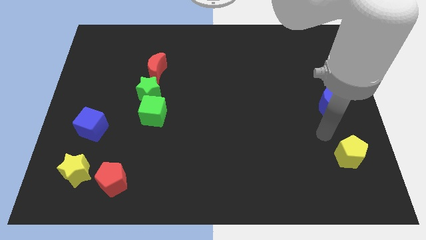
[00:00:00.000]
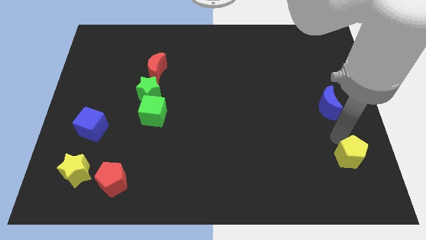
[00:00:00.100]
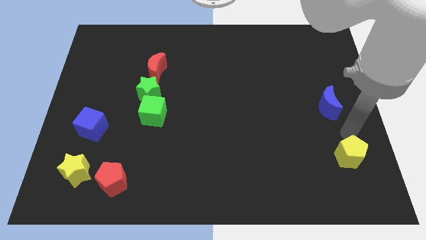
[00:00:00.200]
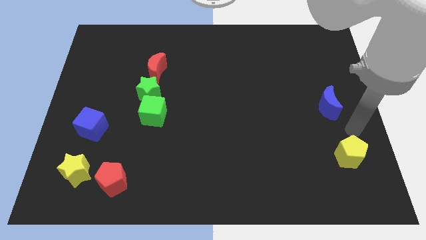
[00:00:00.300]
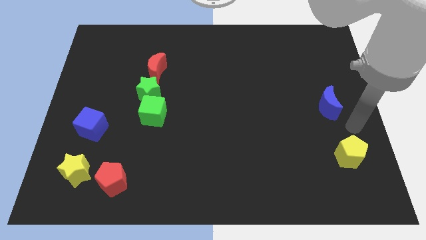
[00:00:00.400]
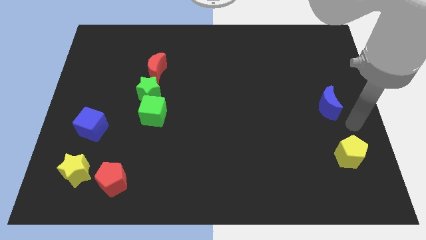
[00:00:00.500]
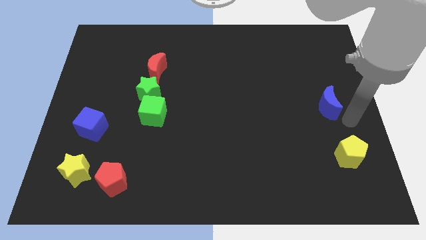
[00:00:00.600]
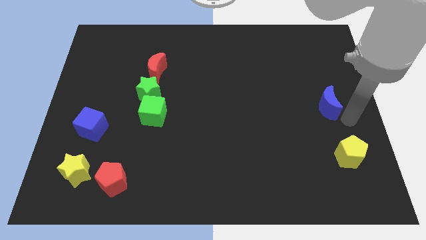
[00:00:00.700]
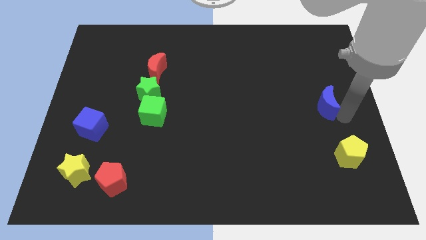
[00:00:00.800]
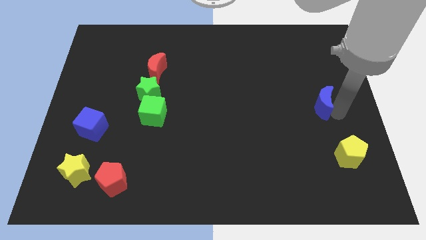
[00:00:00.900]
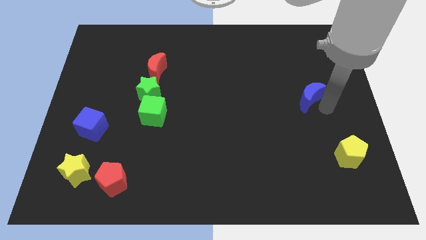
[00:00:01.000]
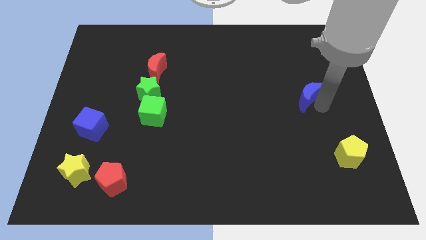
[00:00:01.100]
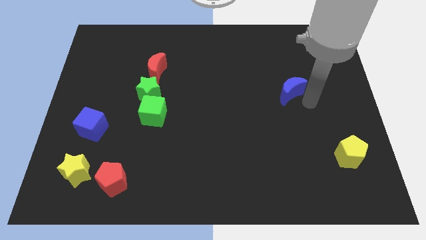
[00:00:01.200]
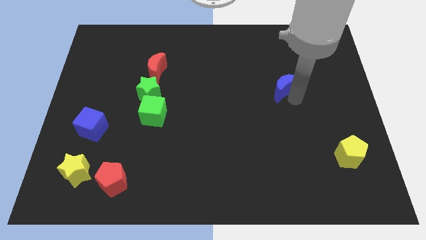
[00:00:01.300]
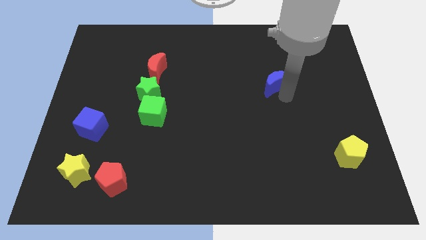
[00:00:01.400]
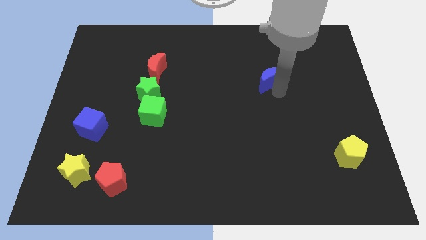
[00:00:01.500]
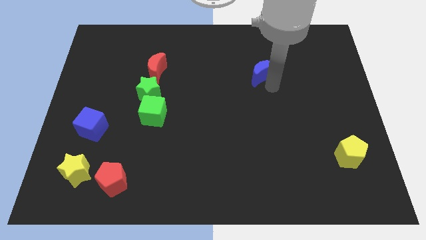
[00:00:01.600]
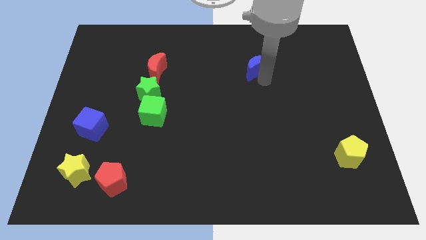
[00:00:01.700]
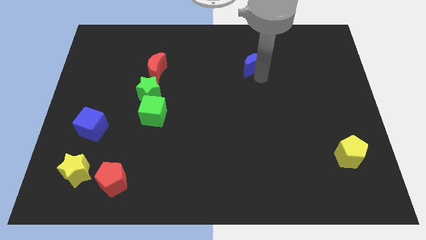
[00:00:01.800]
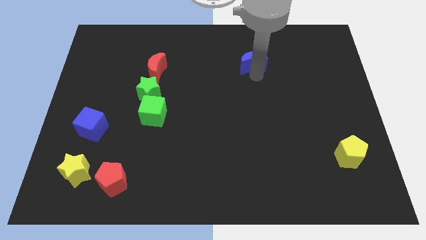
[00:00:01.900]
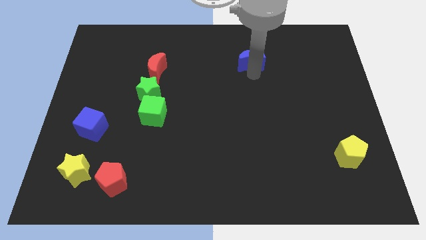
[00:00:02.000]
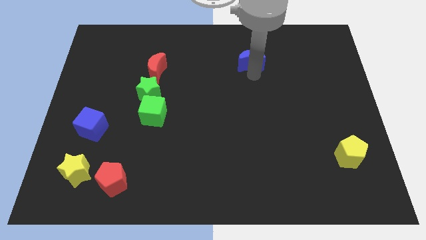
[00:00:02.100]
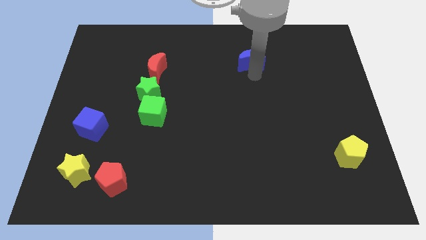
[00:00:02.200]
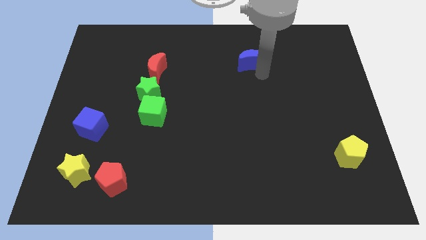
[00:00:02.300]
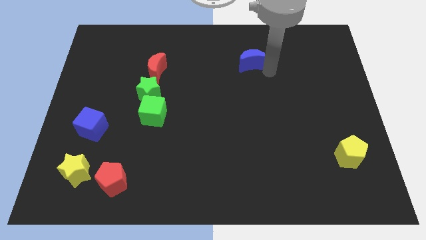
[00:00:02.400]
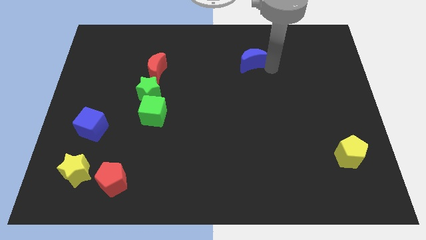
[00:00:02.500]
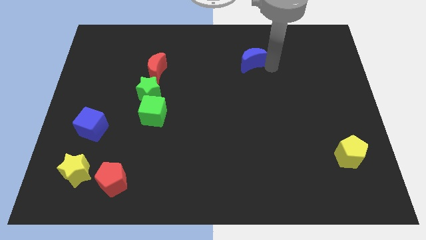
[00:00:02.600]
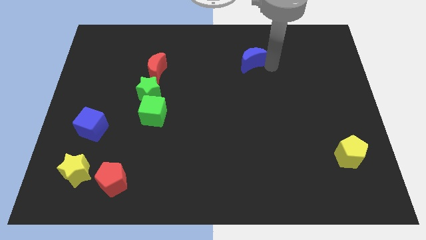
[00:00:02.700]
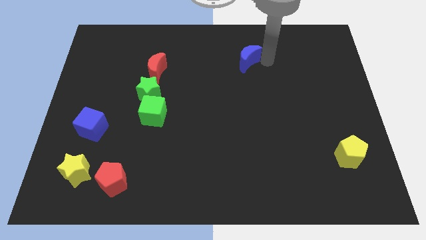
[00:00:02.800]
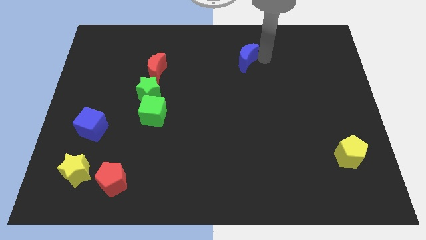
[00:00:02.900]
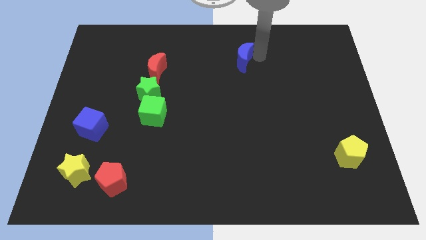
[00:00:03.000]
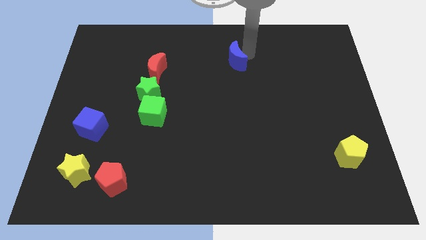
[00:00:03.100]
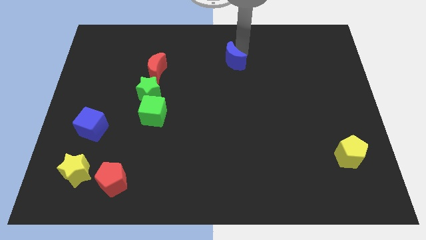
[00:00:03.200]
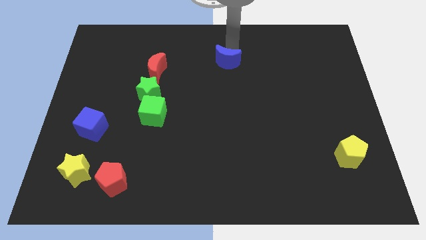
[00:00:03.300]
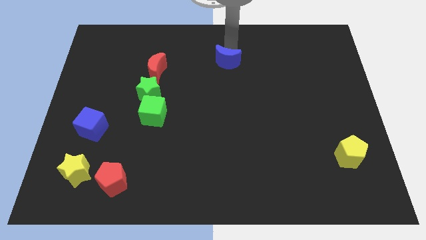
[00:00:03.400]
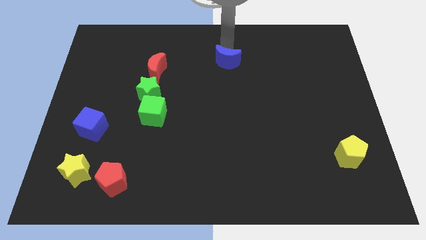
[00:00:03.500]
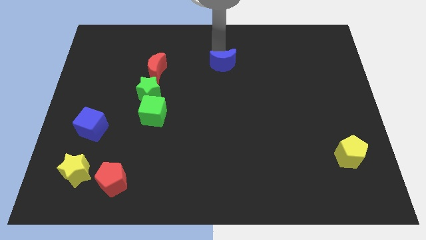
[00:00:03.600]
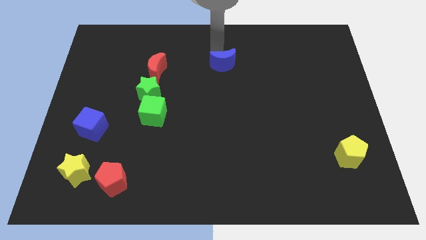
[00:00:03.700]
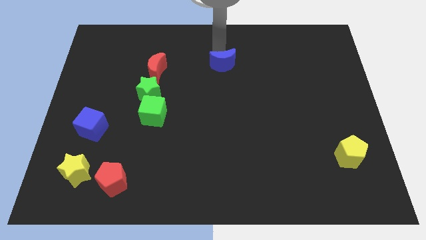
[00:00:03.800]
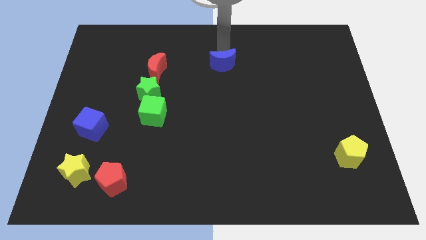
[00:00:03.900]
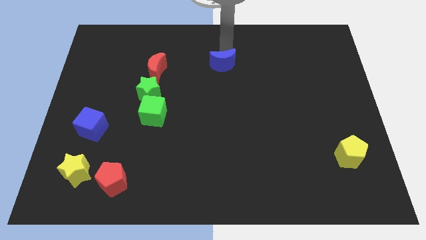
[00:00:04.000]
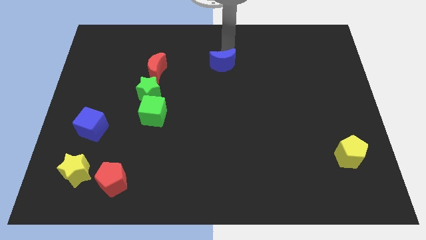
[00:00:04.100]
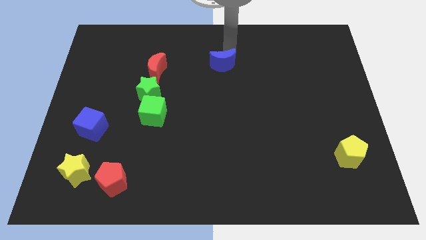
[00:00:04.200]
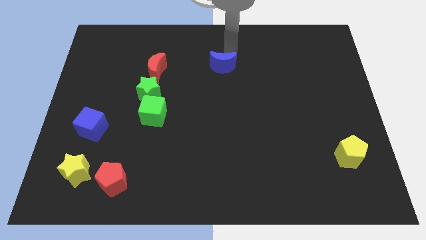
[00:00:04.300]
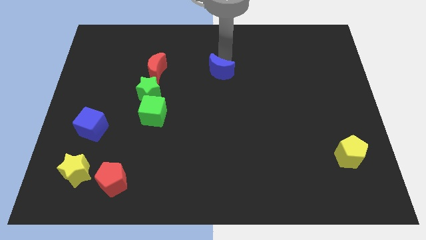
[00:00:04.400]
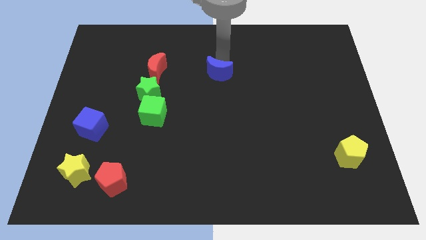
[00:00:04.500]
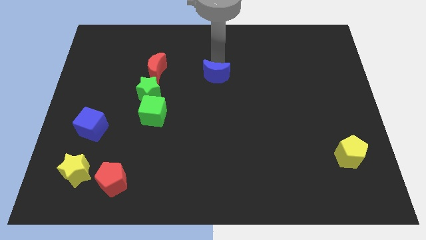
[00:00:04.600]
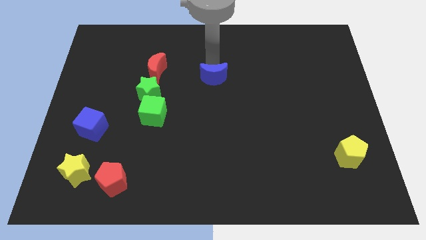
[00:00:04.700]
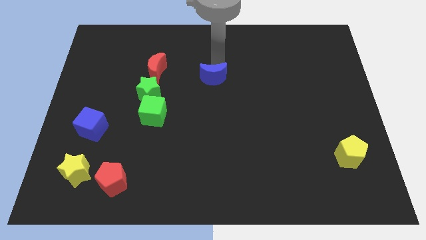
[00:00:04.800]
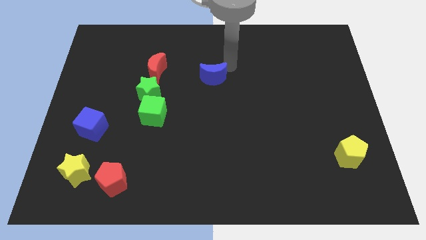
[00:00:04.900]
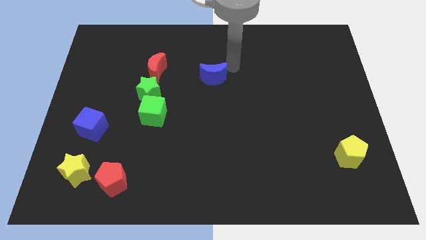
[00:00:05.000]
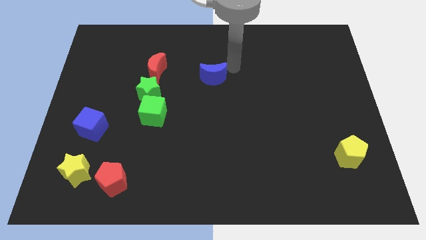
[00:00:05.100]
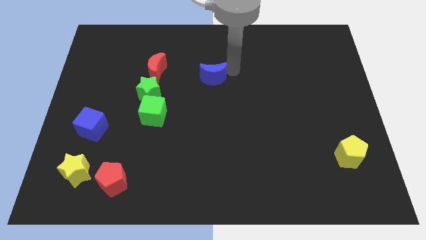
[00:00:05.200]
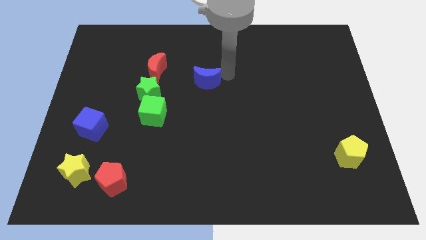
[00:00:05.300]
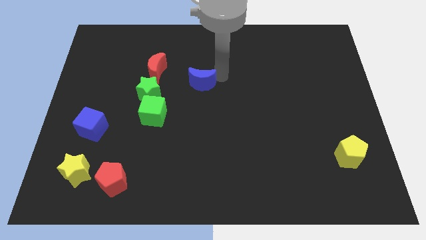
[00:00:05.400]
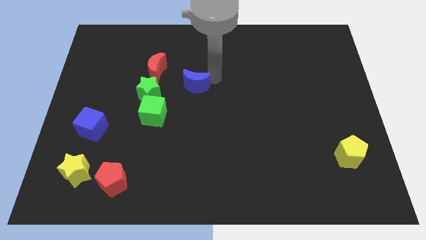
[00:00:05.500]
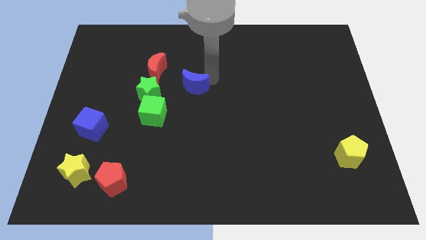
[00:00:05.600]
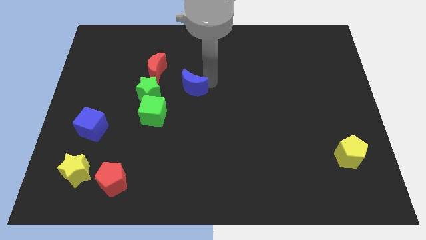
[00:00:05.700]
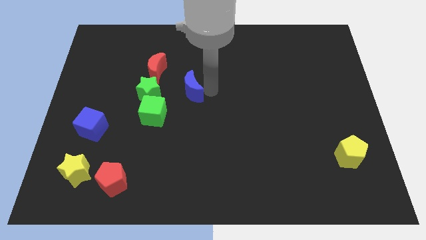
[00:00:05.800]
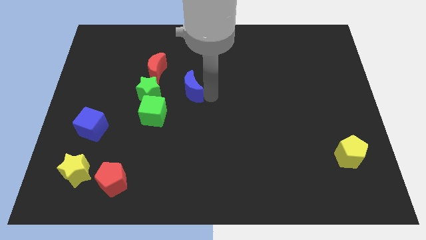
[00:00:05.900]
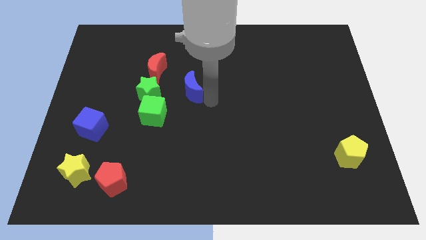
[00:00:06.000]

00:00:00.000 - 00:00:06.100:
slide blue moon to the right of green star

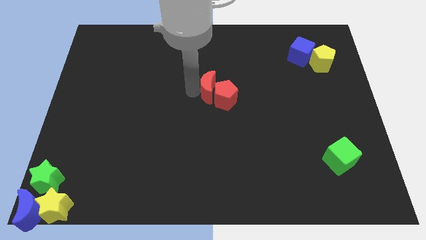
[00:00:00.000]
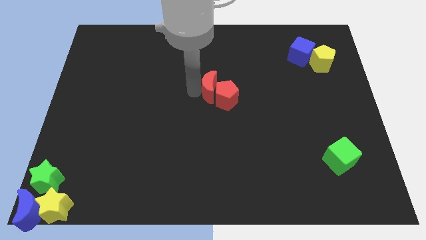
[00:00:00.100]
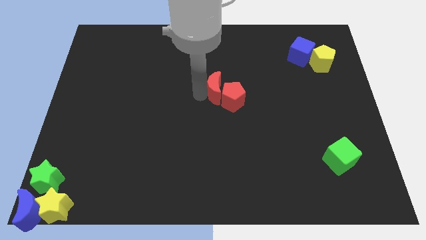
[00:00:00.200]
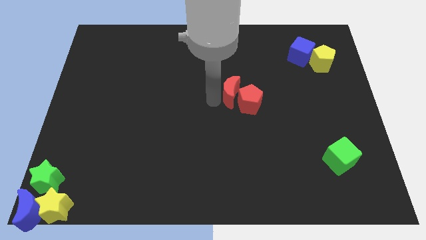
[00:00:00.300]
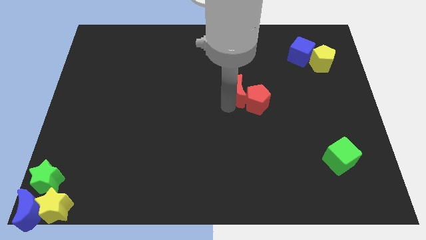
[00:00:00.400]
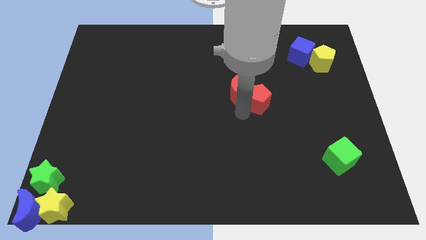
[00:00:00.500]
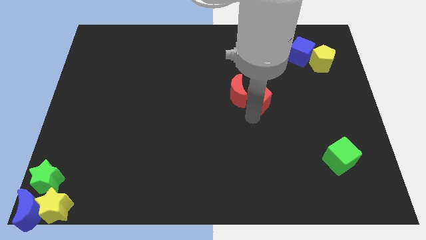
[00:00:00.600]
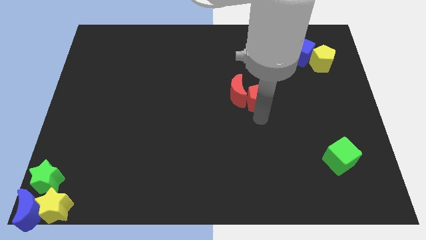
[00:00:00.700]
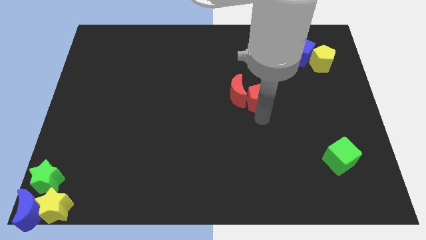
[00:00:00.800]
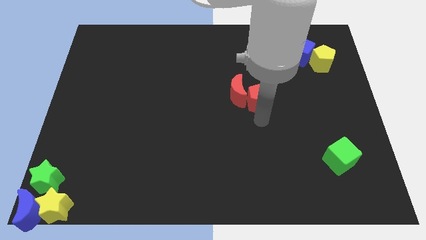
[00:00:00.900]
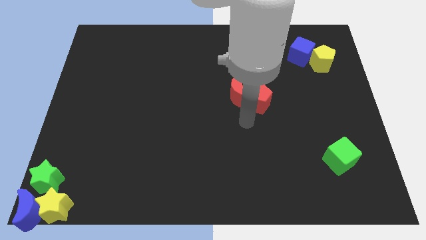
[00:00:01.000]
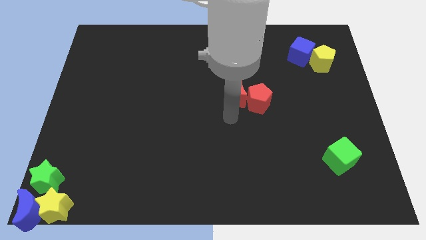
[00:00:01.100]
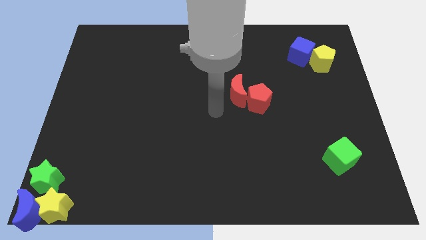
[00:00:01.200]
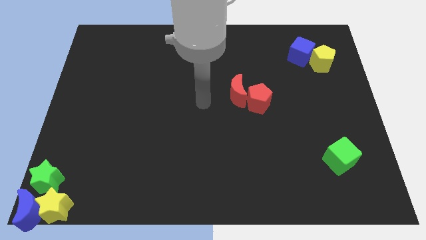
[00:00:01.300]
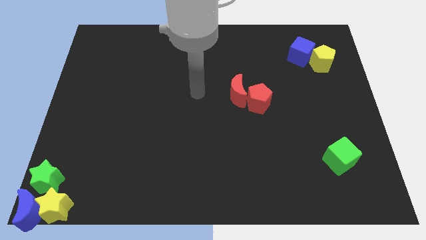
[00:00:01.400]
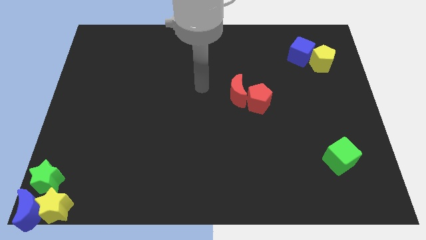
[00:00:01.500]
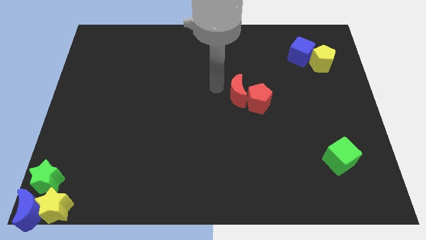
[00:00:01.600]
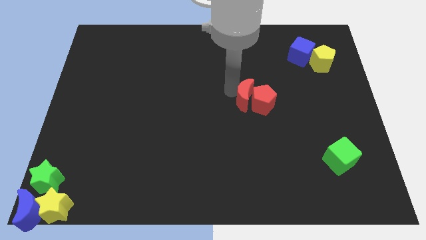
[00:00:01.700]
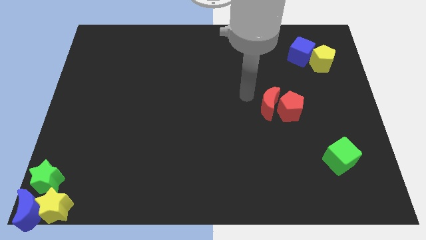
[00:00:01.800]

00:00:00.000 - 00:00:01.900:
push red pentagon with the red moon

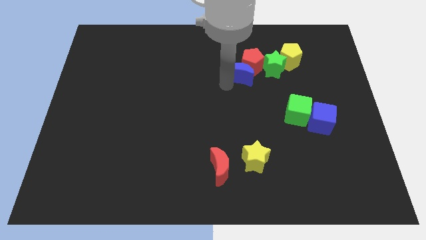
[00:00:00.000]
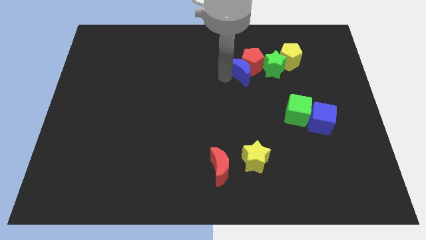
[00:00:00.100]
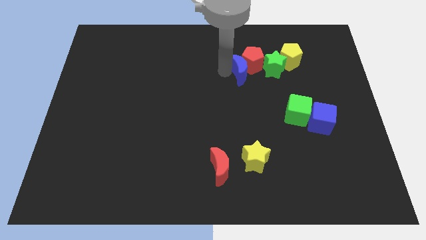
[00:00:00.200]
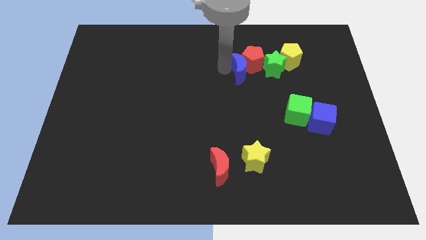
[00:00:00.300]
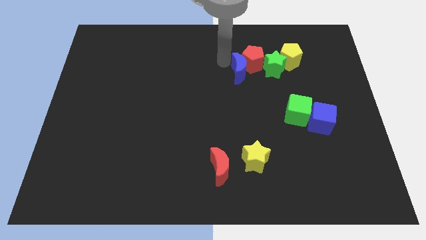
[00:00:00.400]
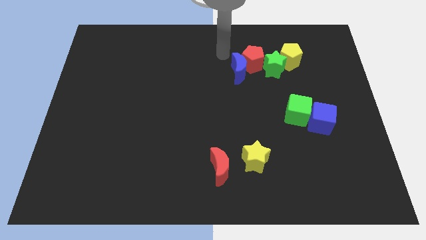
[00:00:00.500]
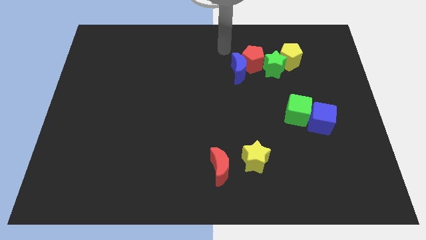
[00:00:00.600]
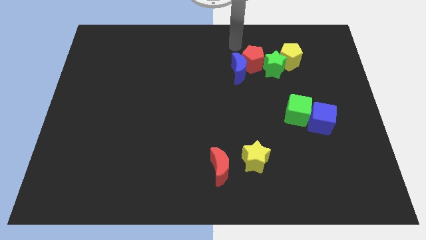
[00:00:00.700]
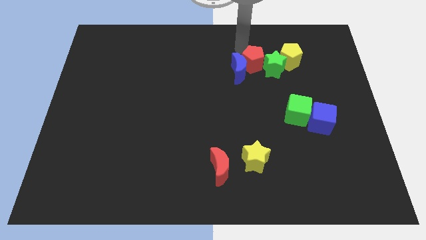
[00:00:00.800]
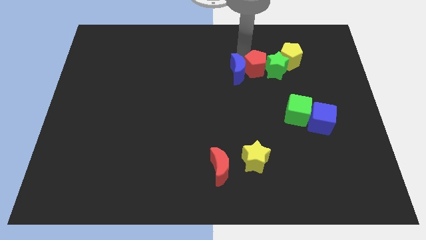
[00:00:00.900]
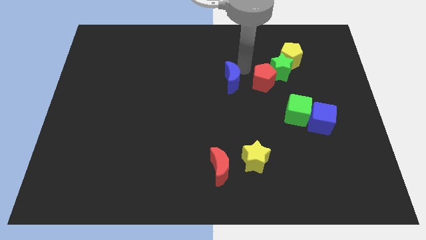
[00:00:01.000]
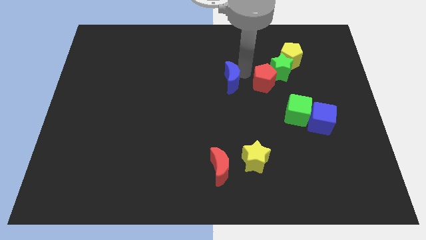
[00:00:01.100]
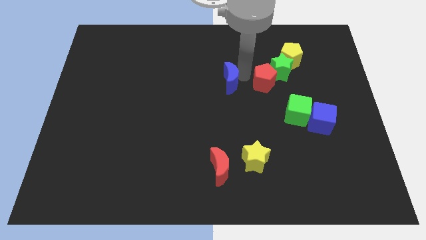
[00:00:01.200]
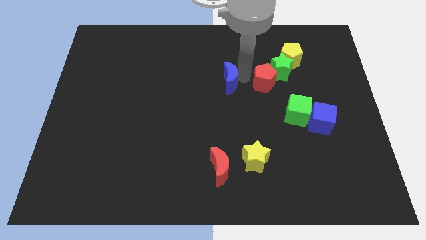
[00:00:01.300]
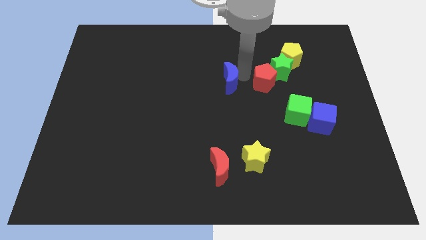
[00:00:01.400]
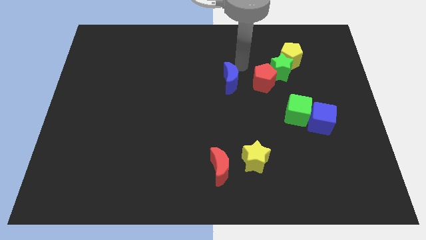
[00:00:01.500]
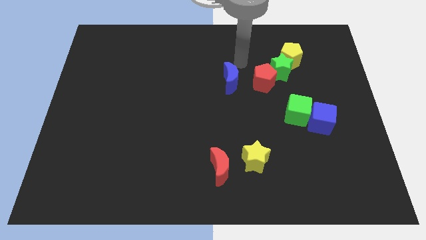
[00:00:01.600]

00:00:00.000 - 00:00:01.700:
separate blue moon and red pentagon
